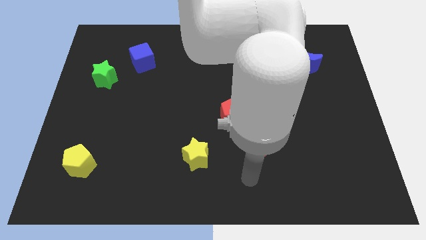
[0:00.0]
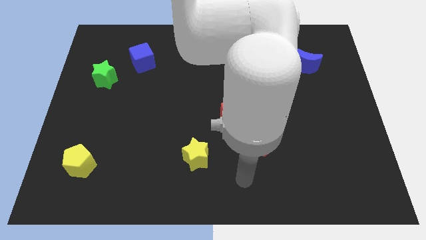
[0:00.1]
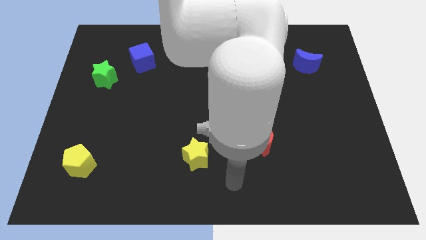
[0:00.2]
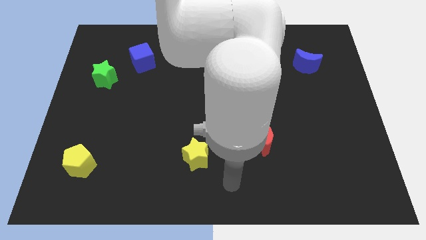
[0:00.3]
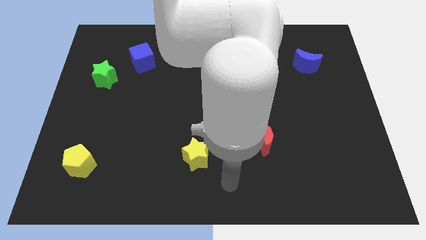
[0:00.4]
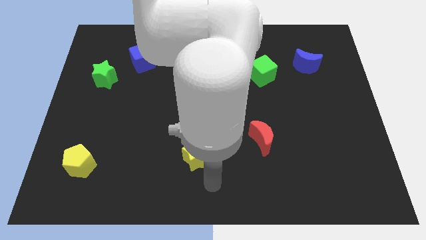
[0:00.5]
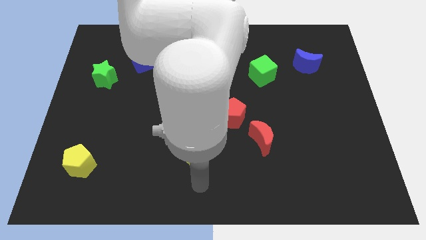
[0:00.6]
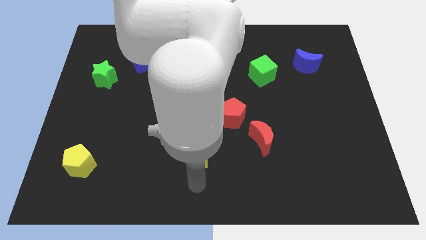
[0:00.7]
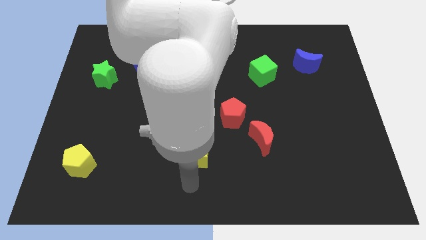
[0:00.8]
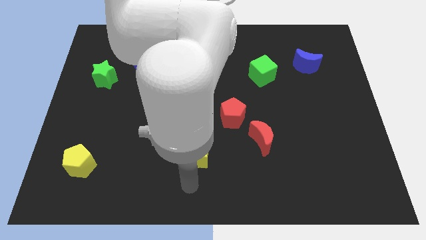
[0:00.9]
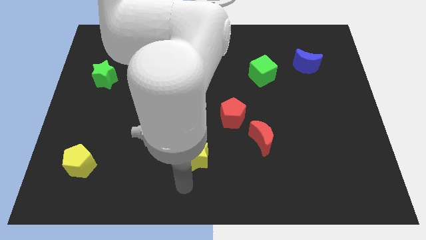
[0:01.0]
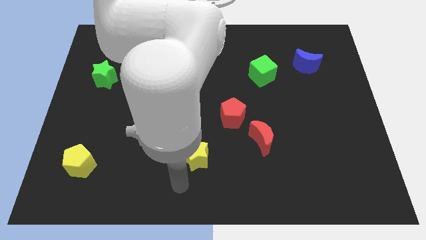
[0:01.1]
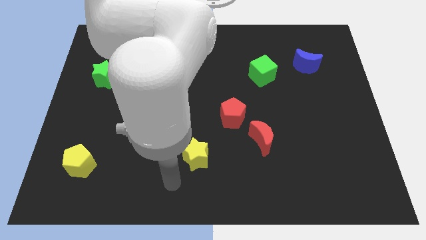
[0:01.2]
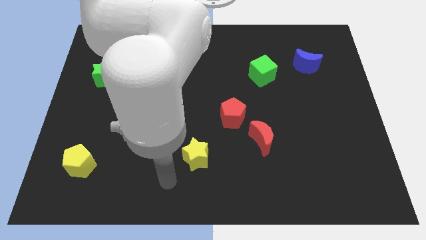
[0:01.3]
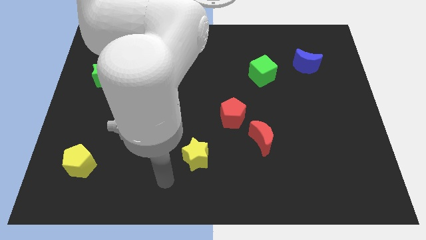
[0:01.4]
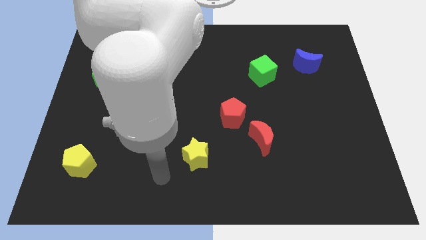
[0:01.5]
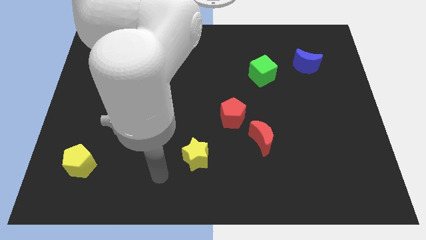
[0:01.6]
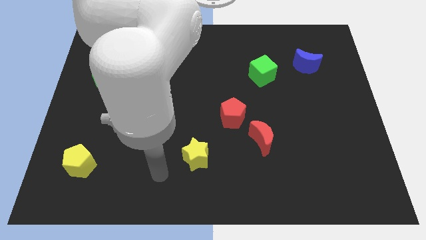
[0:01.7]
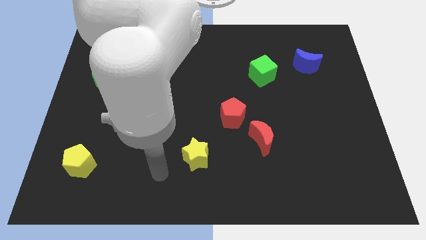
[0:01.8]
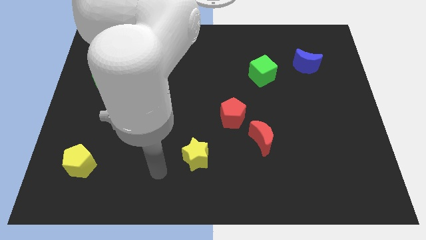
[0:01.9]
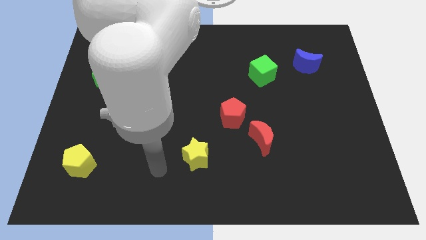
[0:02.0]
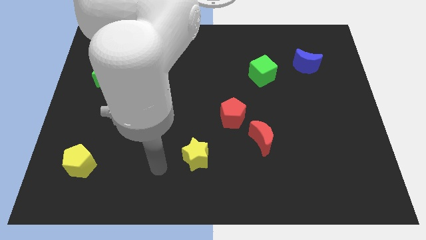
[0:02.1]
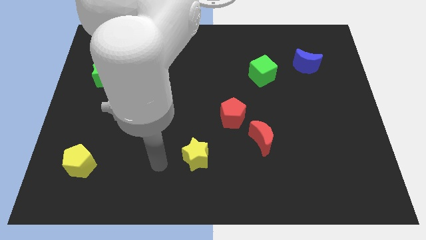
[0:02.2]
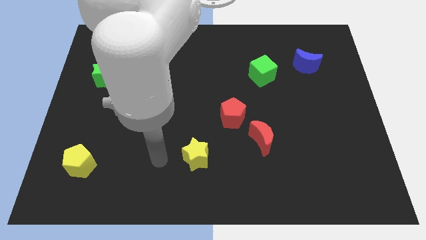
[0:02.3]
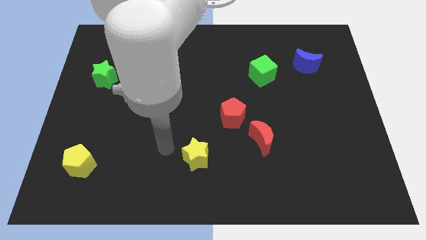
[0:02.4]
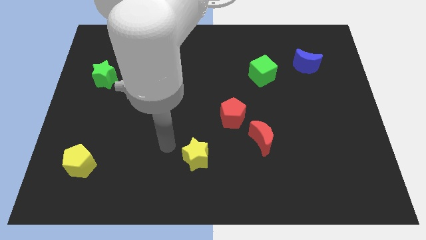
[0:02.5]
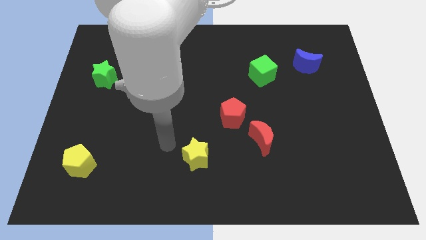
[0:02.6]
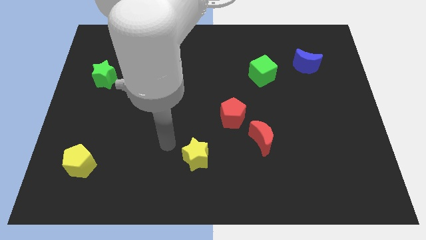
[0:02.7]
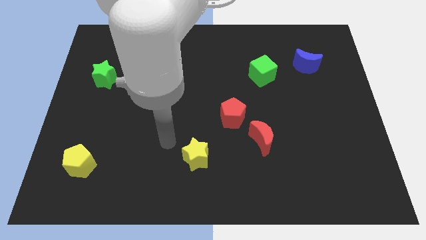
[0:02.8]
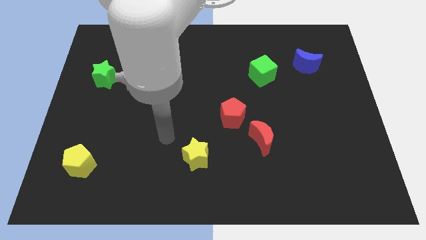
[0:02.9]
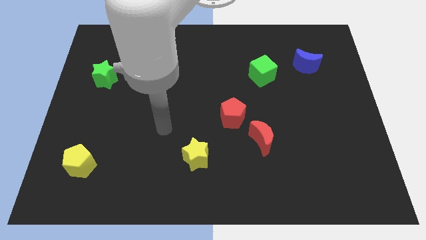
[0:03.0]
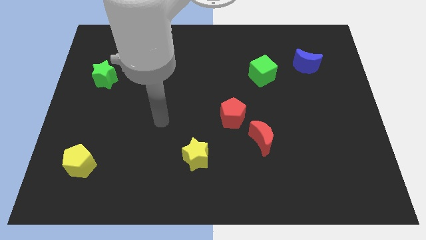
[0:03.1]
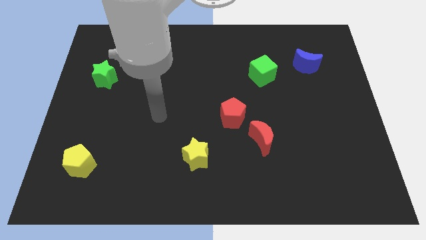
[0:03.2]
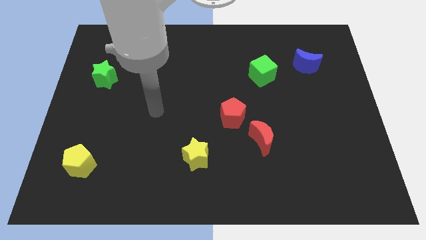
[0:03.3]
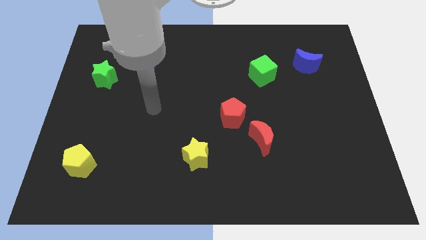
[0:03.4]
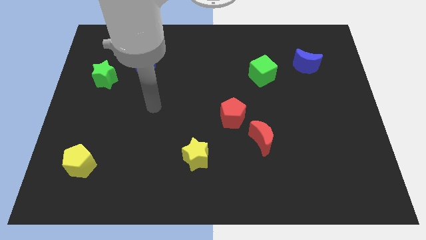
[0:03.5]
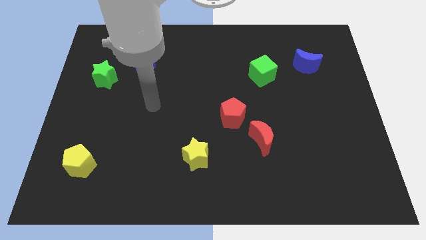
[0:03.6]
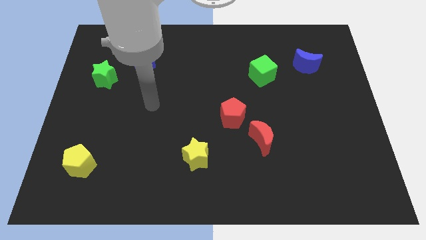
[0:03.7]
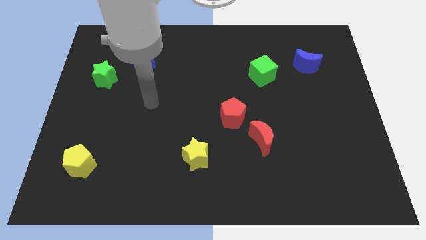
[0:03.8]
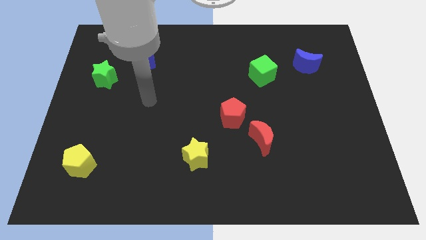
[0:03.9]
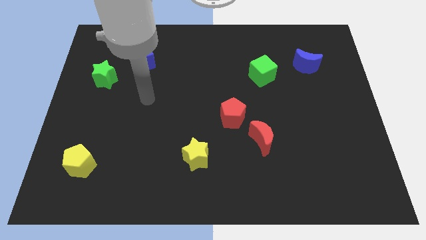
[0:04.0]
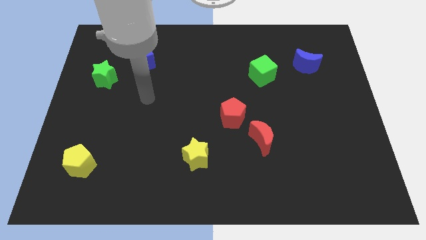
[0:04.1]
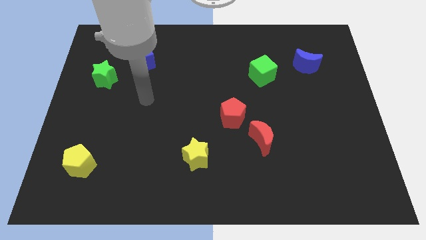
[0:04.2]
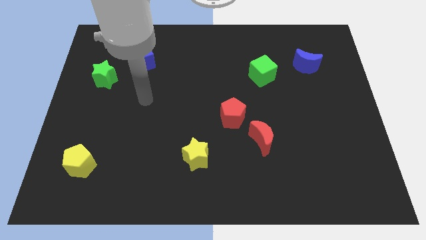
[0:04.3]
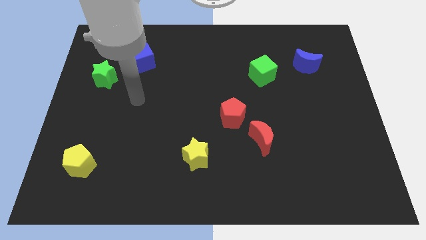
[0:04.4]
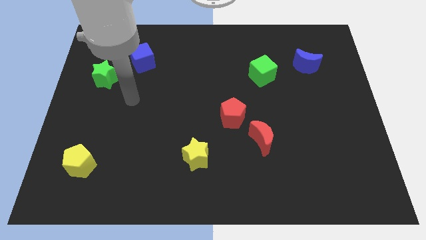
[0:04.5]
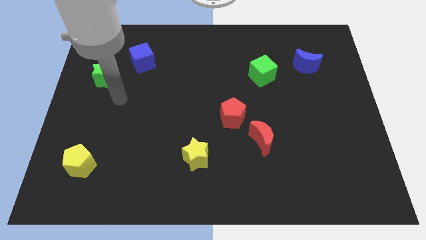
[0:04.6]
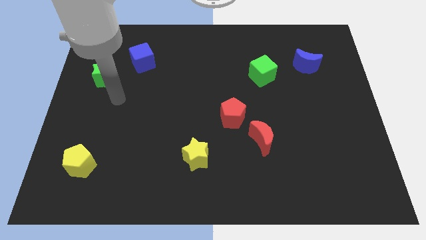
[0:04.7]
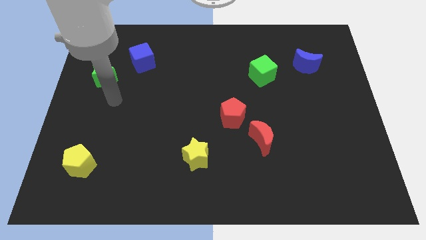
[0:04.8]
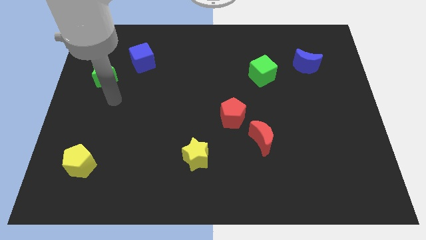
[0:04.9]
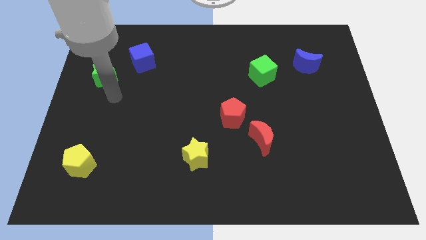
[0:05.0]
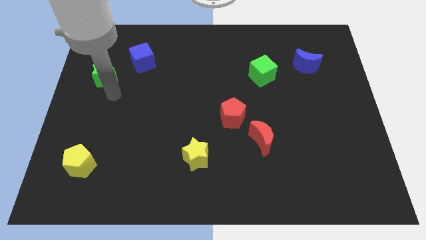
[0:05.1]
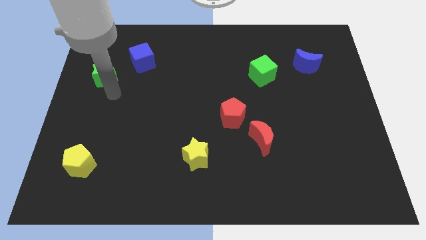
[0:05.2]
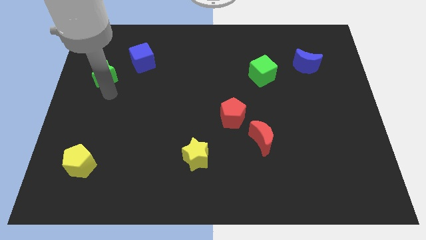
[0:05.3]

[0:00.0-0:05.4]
move the arm diagonally to the green star

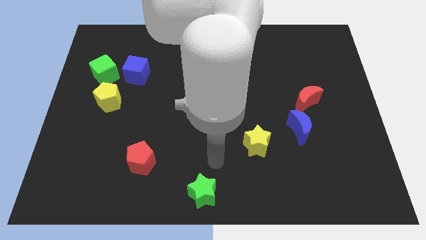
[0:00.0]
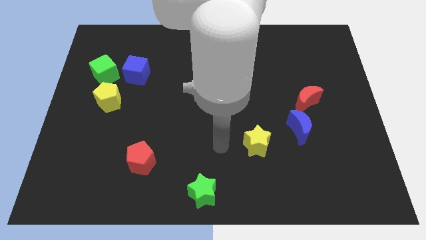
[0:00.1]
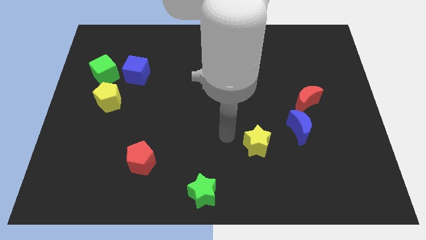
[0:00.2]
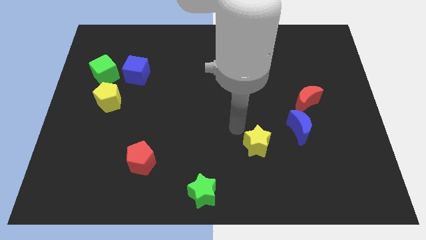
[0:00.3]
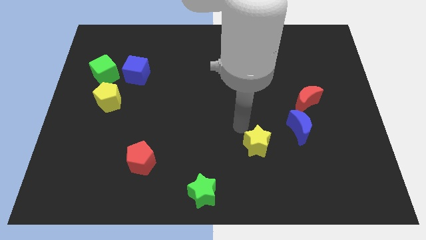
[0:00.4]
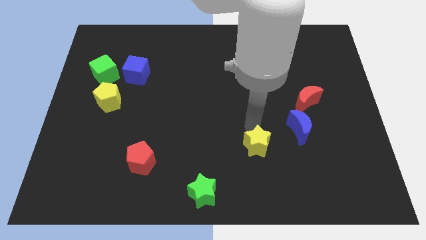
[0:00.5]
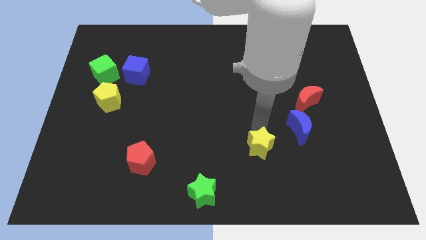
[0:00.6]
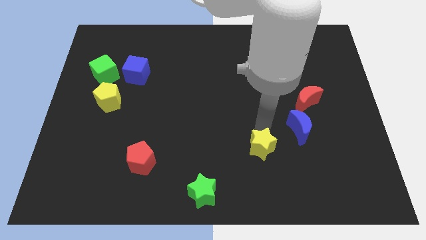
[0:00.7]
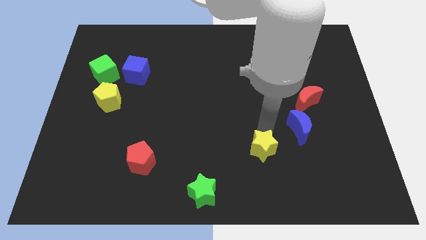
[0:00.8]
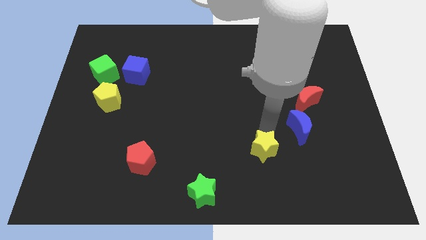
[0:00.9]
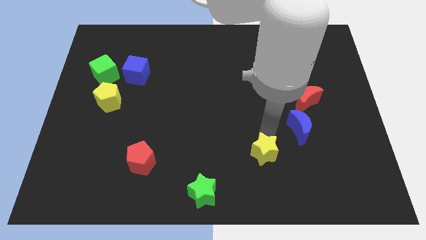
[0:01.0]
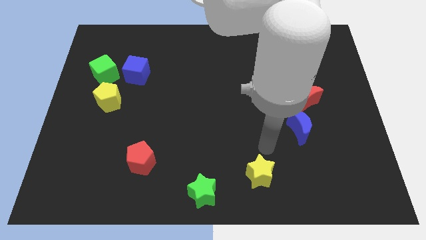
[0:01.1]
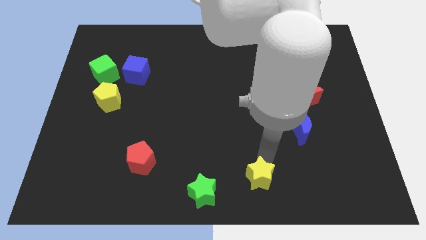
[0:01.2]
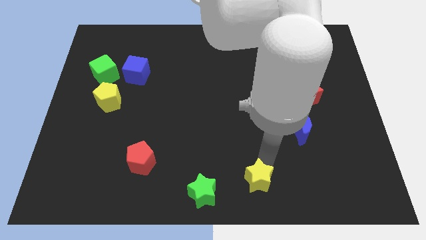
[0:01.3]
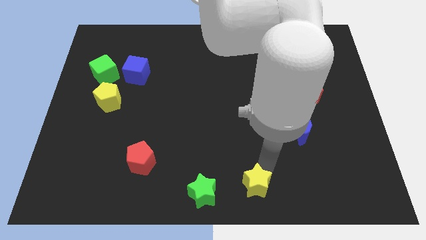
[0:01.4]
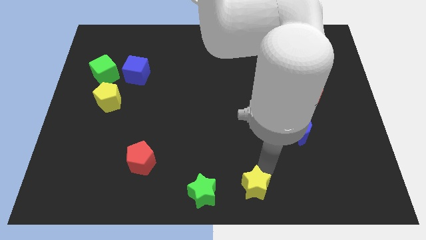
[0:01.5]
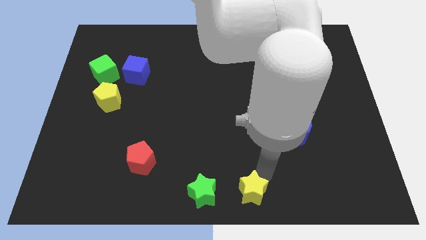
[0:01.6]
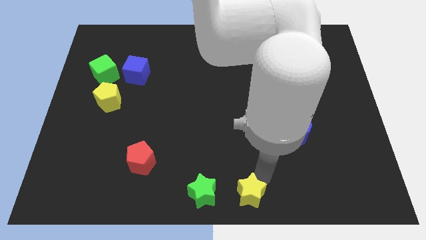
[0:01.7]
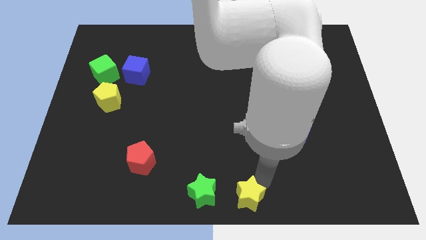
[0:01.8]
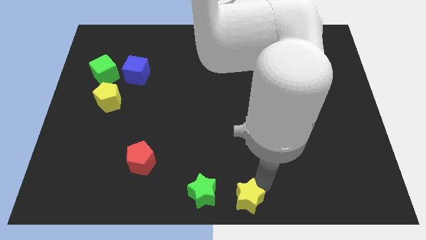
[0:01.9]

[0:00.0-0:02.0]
place the yellow star at right side of the green star

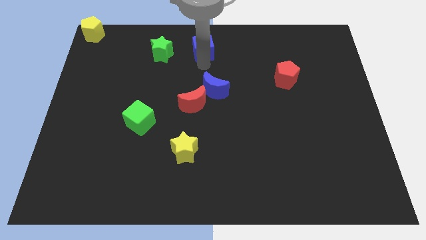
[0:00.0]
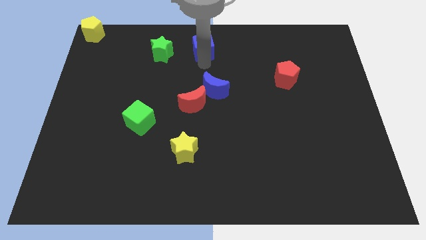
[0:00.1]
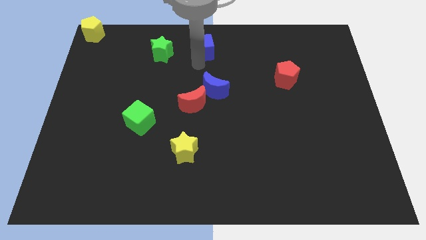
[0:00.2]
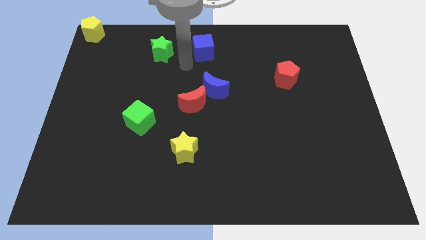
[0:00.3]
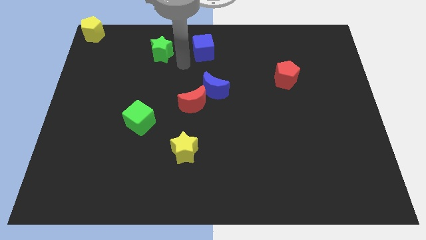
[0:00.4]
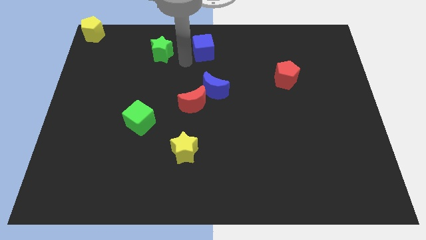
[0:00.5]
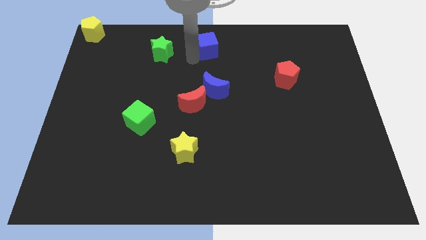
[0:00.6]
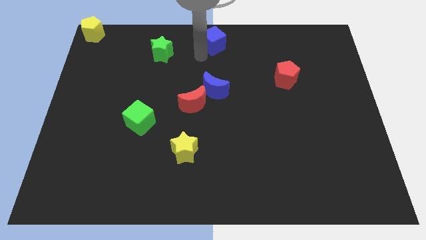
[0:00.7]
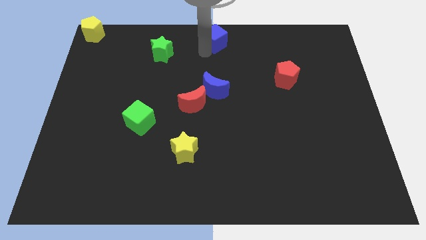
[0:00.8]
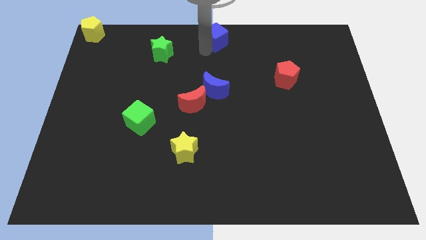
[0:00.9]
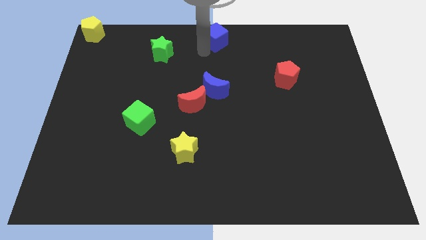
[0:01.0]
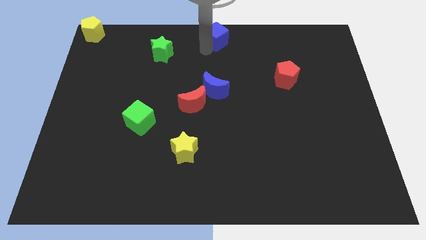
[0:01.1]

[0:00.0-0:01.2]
place the blue cube at the top center

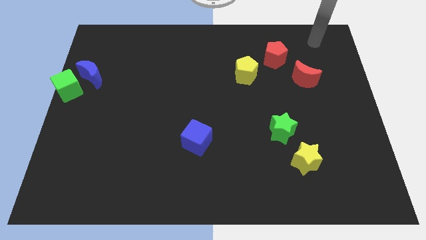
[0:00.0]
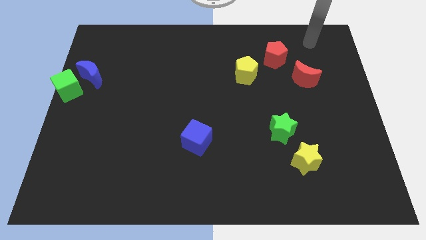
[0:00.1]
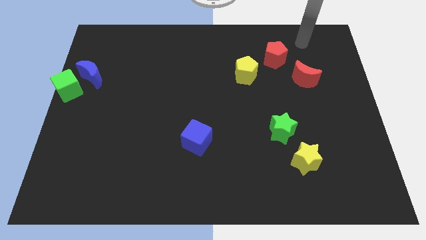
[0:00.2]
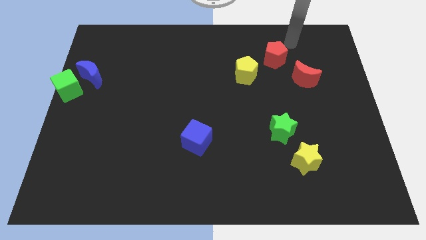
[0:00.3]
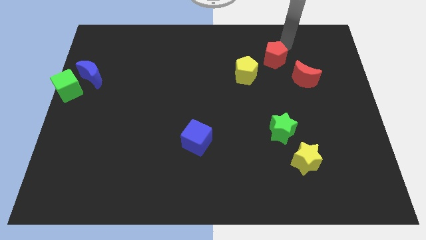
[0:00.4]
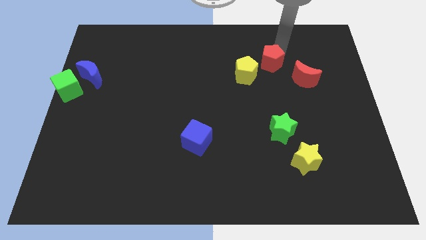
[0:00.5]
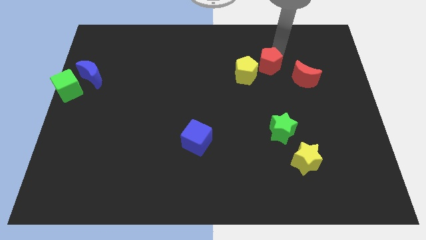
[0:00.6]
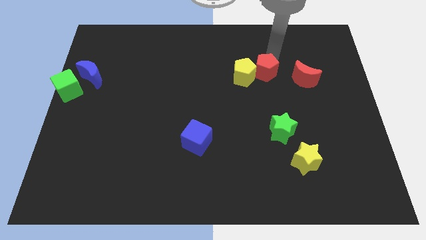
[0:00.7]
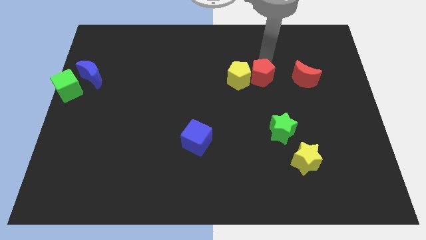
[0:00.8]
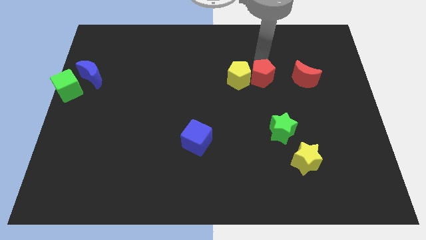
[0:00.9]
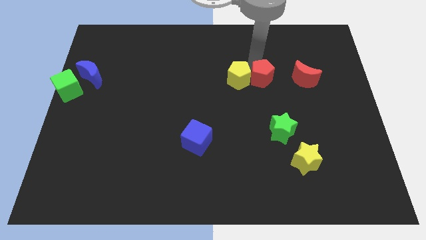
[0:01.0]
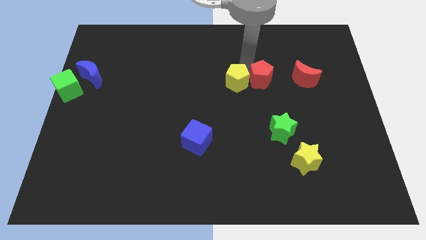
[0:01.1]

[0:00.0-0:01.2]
push the red pentagon to the right side of the yellow pentagon
